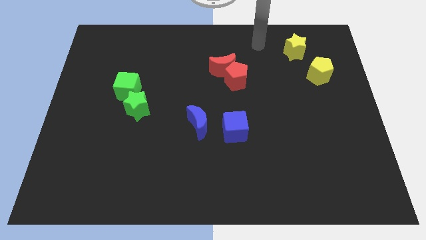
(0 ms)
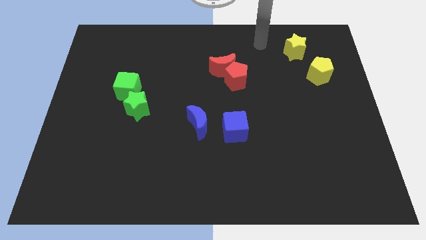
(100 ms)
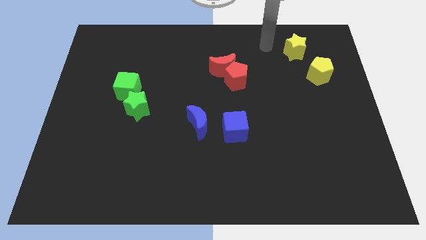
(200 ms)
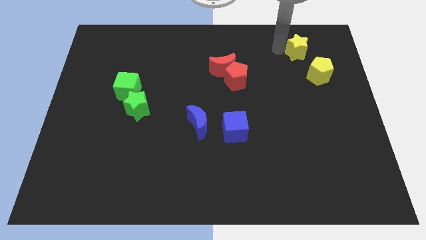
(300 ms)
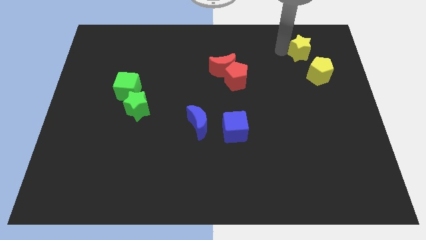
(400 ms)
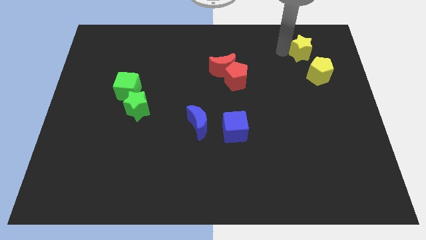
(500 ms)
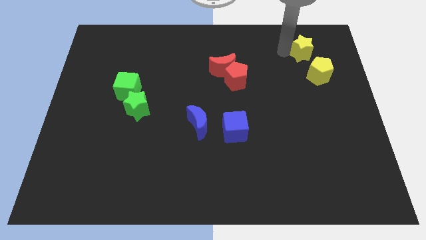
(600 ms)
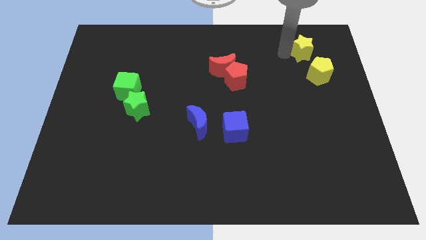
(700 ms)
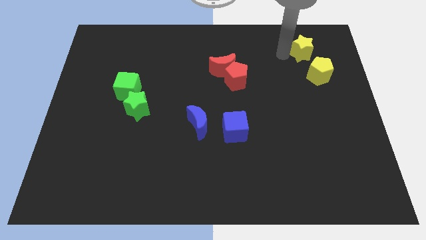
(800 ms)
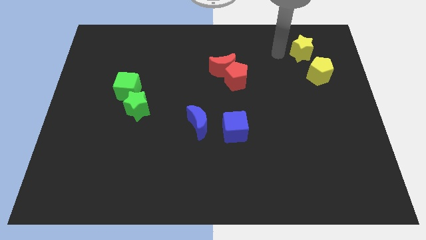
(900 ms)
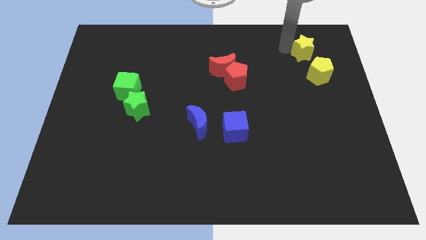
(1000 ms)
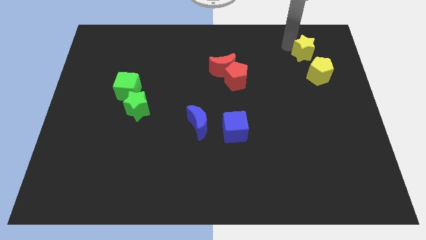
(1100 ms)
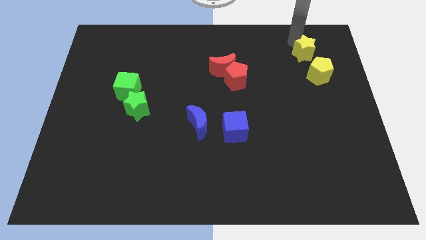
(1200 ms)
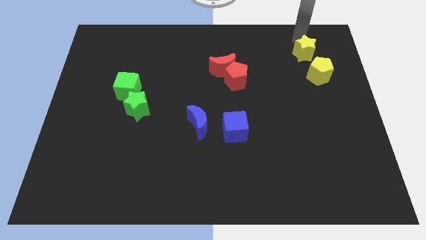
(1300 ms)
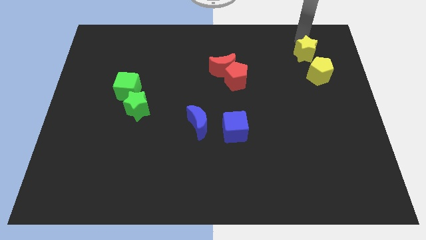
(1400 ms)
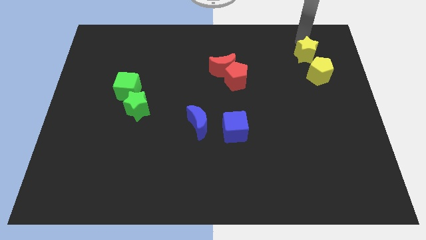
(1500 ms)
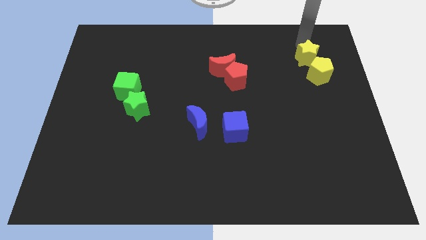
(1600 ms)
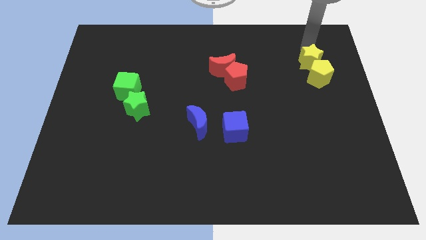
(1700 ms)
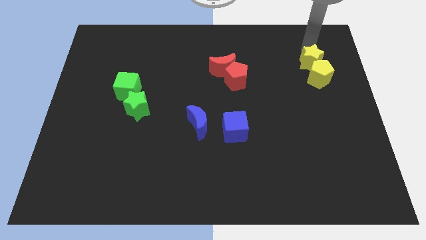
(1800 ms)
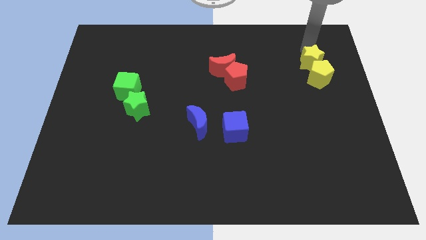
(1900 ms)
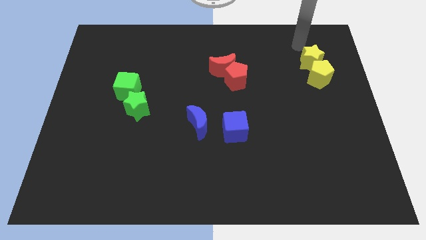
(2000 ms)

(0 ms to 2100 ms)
arrange the yellow star on the top of the yellow pentagon

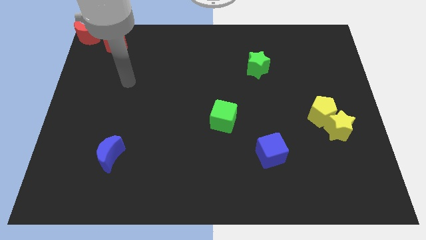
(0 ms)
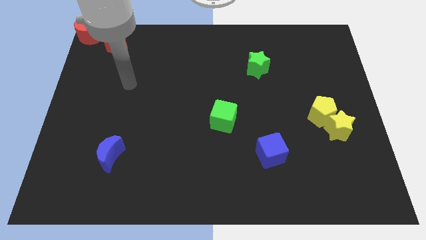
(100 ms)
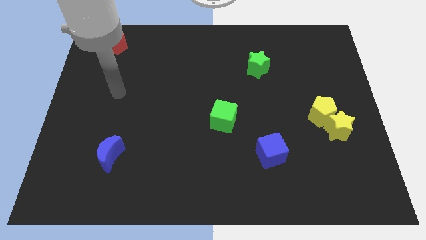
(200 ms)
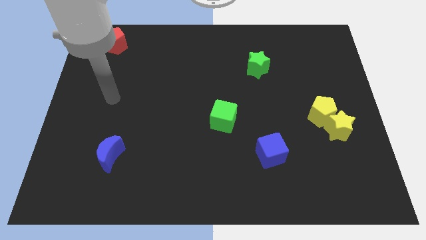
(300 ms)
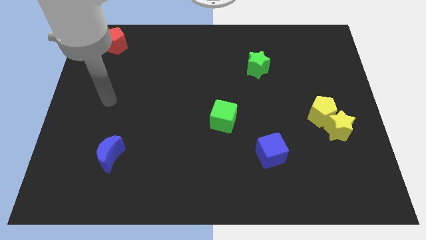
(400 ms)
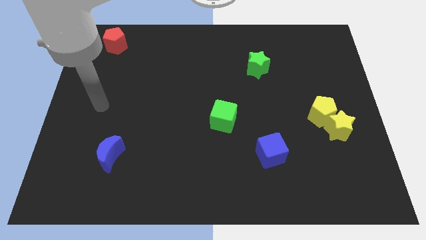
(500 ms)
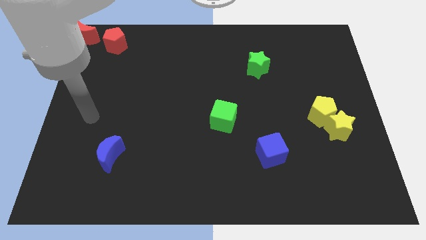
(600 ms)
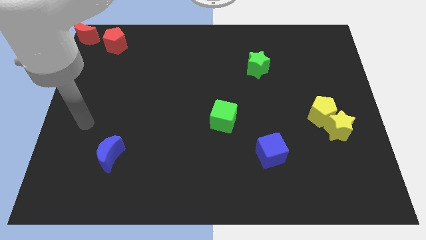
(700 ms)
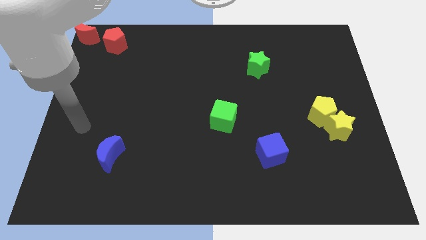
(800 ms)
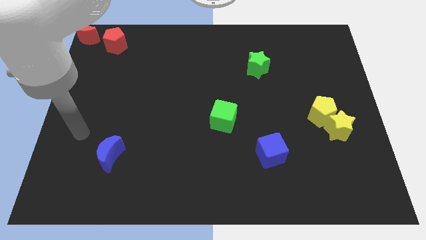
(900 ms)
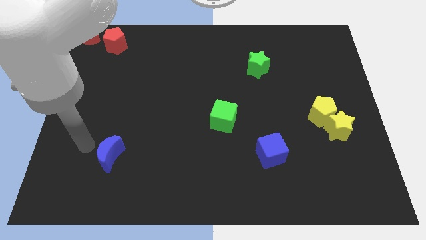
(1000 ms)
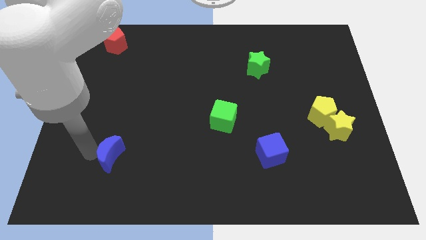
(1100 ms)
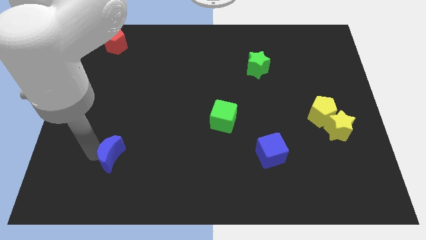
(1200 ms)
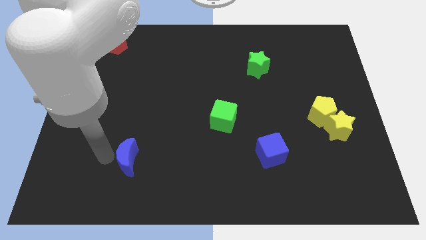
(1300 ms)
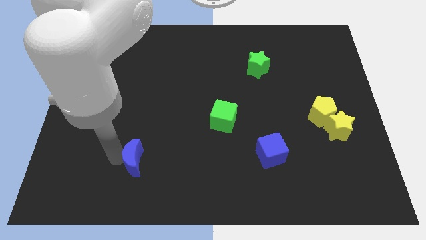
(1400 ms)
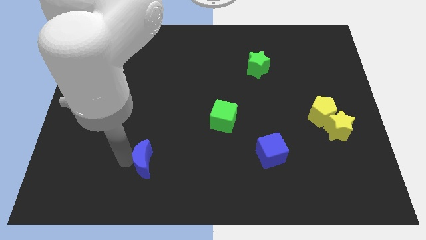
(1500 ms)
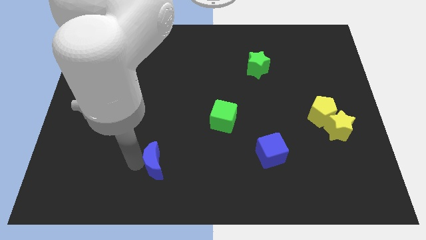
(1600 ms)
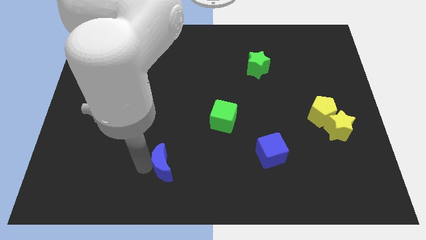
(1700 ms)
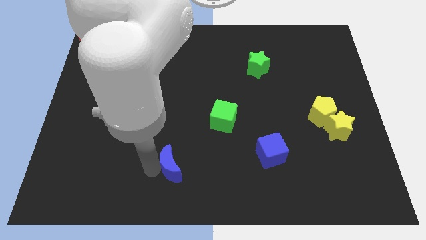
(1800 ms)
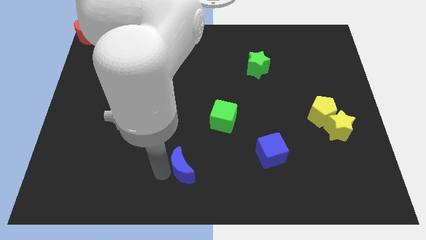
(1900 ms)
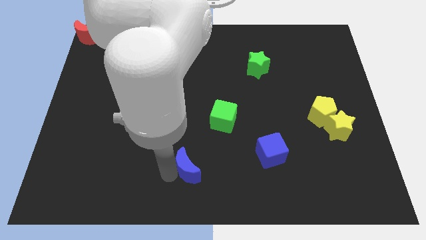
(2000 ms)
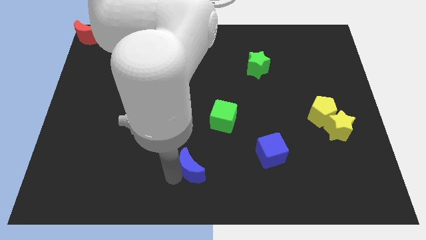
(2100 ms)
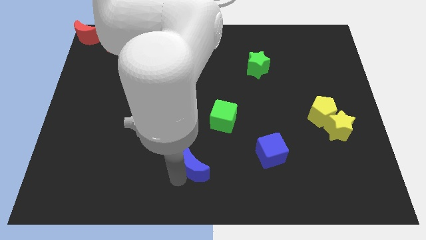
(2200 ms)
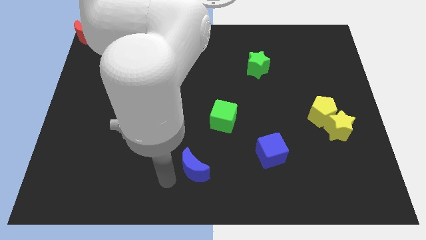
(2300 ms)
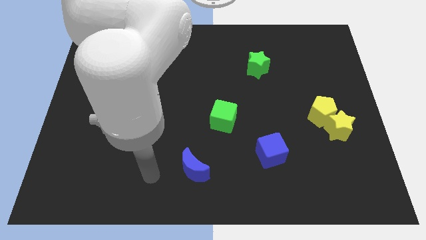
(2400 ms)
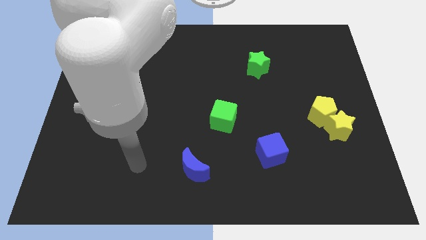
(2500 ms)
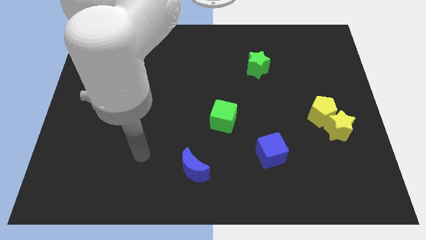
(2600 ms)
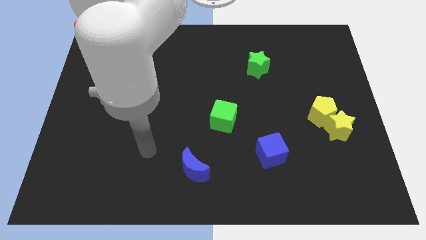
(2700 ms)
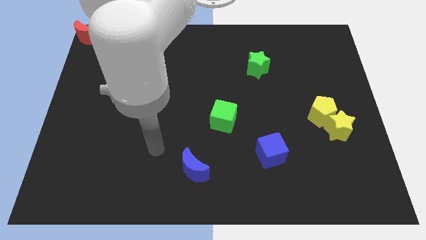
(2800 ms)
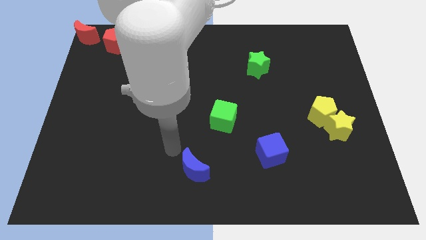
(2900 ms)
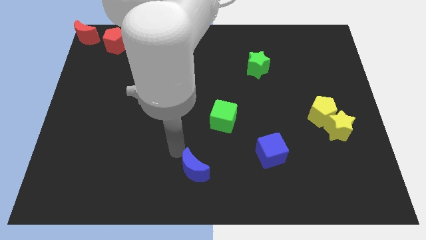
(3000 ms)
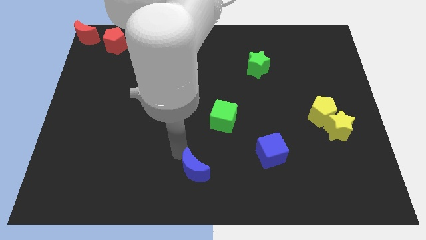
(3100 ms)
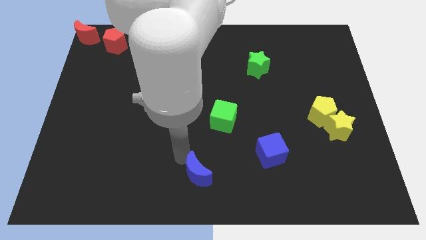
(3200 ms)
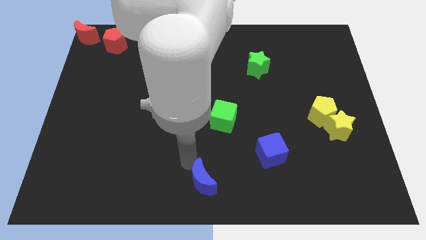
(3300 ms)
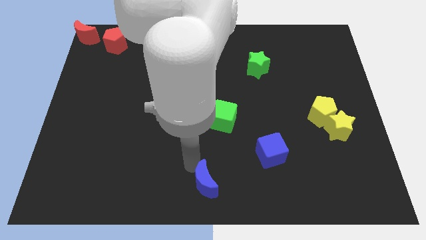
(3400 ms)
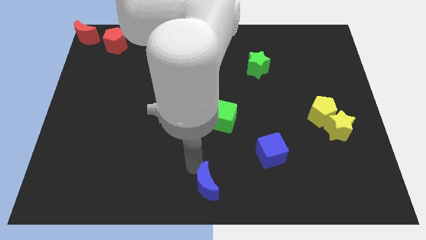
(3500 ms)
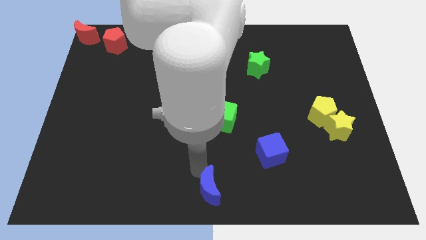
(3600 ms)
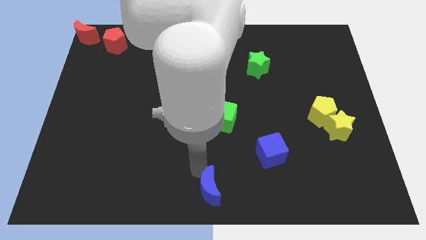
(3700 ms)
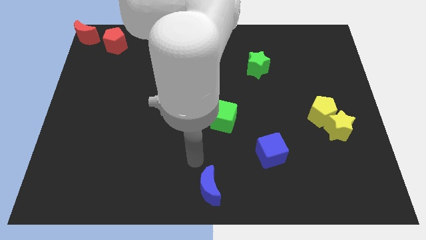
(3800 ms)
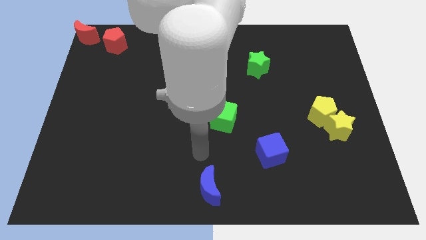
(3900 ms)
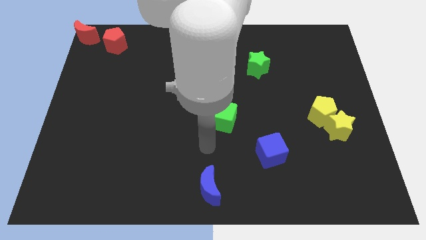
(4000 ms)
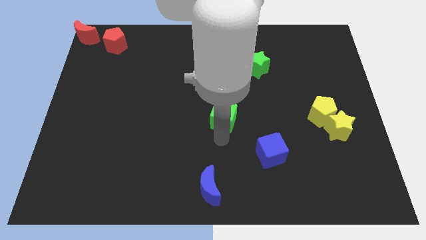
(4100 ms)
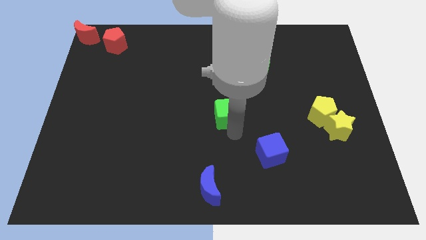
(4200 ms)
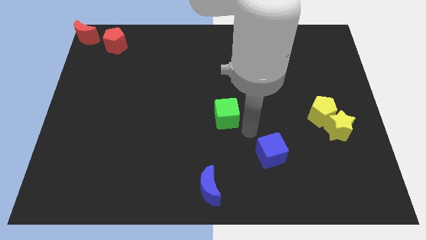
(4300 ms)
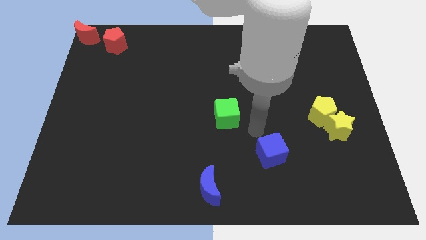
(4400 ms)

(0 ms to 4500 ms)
move the blue crescent to the bottom center of the board

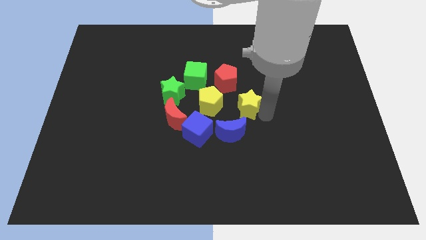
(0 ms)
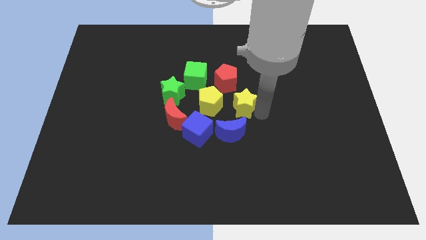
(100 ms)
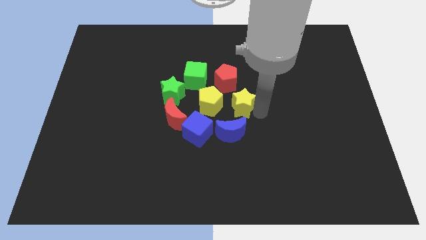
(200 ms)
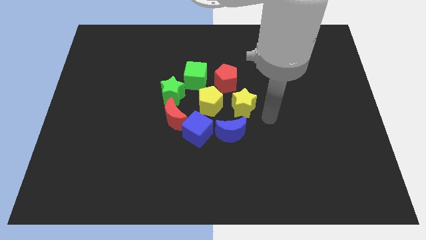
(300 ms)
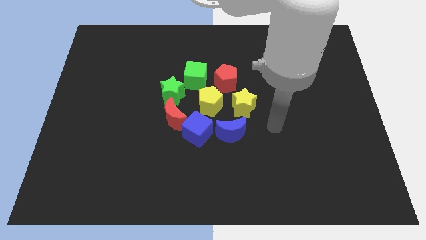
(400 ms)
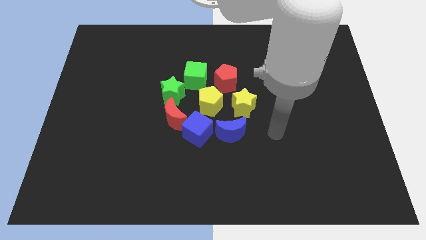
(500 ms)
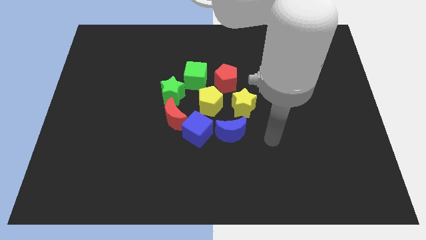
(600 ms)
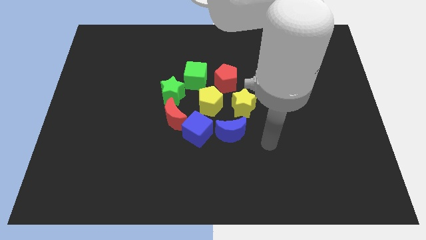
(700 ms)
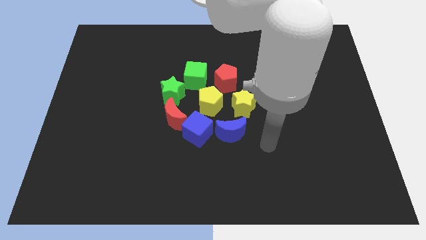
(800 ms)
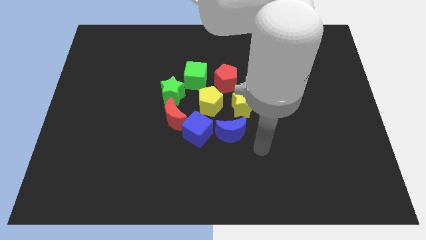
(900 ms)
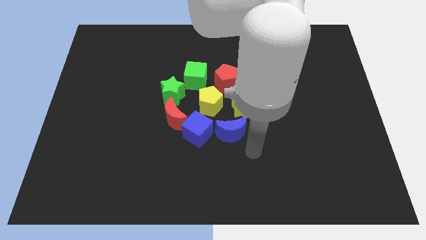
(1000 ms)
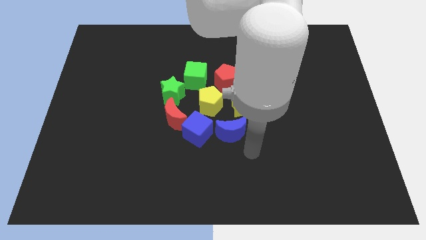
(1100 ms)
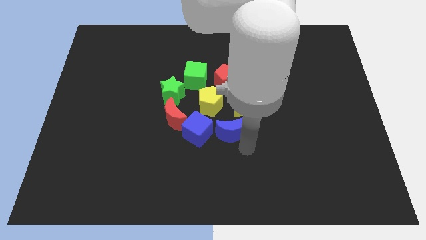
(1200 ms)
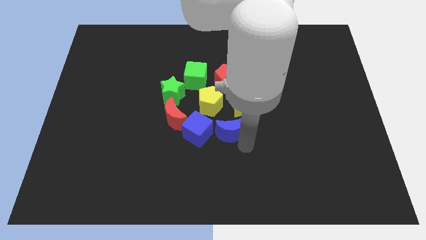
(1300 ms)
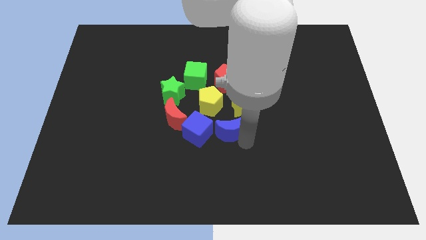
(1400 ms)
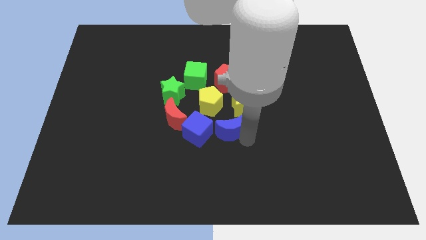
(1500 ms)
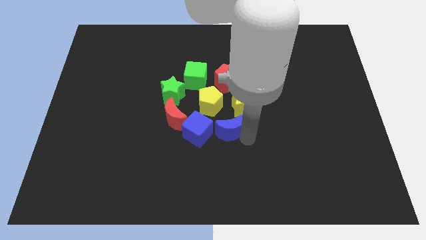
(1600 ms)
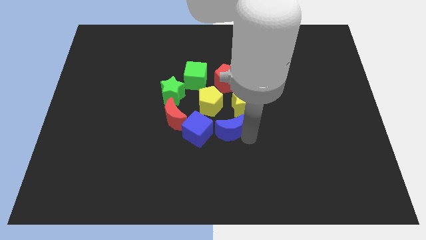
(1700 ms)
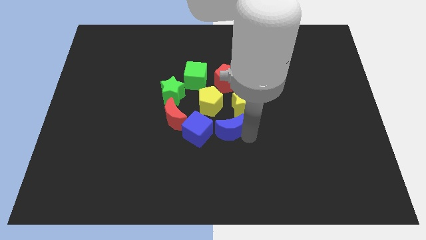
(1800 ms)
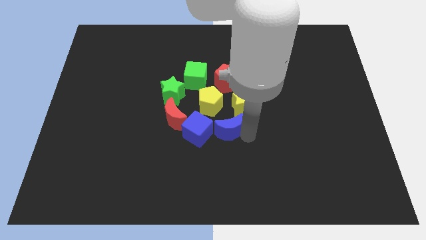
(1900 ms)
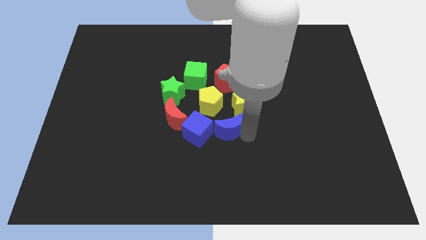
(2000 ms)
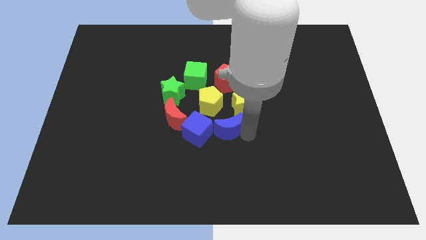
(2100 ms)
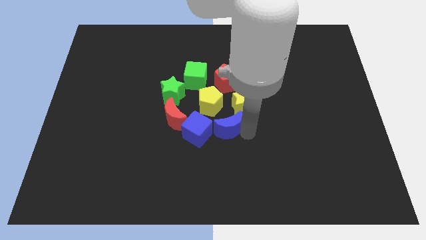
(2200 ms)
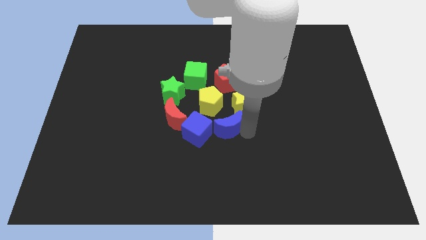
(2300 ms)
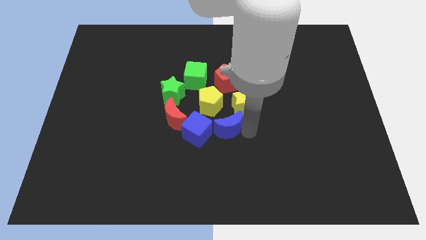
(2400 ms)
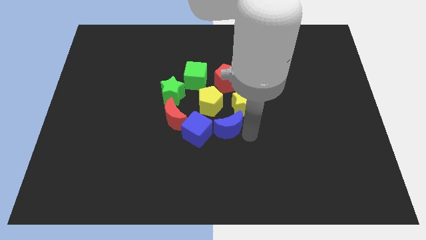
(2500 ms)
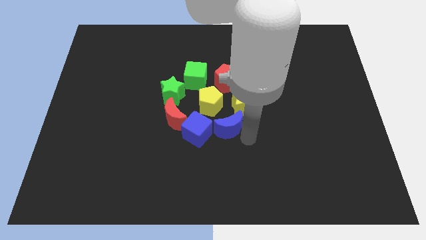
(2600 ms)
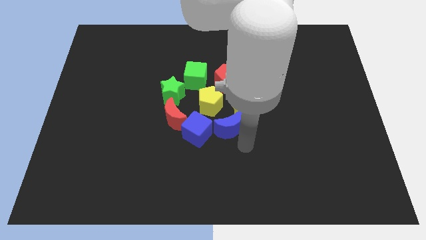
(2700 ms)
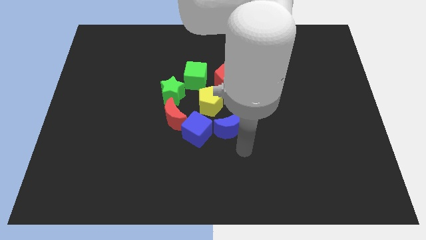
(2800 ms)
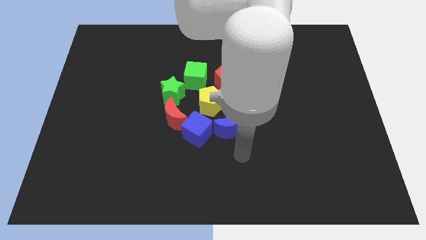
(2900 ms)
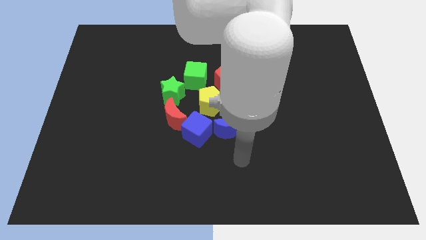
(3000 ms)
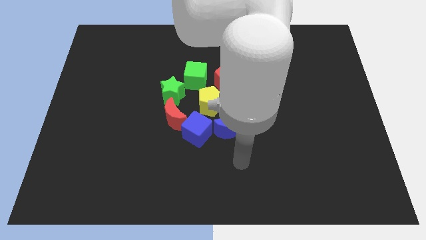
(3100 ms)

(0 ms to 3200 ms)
push the blue crescent slightly towards up
